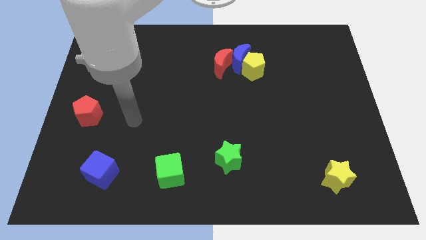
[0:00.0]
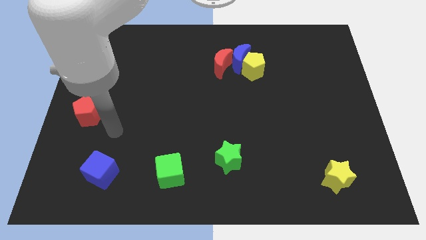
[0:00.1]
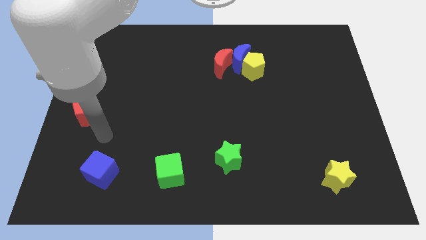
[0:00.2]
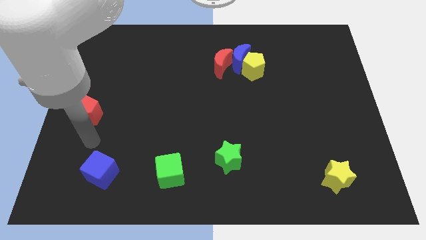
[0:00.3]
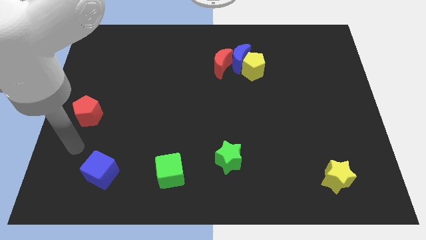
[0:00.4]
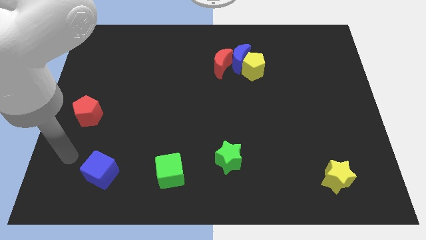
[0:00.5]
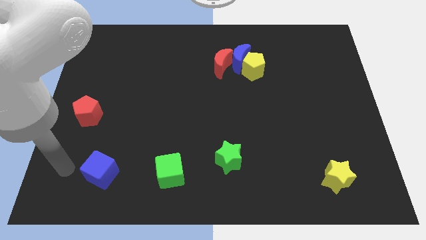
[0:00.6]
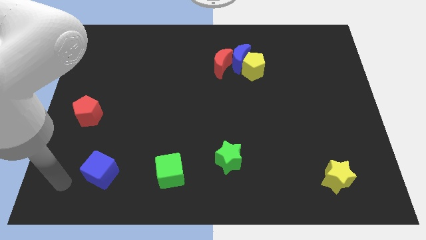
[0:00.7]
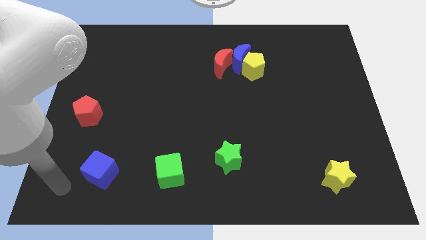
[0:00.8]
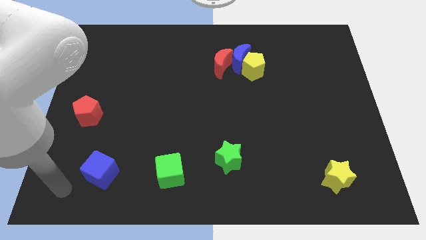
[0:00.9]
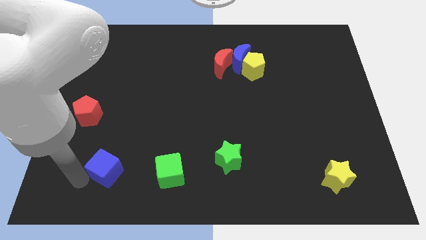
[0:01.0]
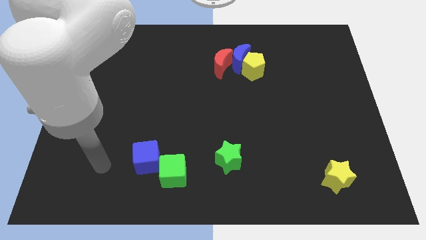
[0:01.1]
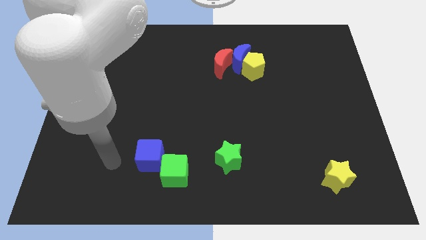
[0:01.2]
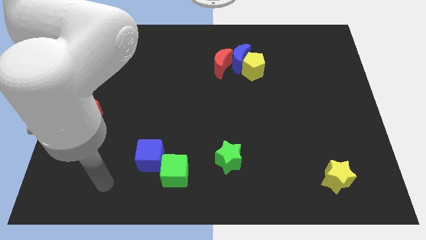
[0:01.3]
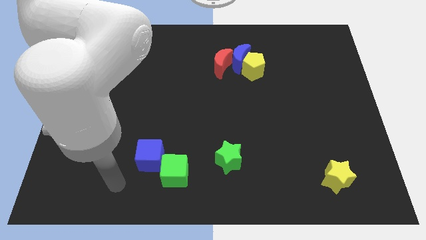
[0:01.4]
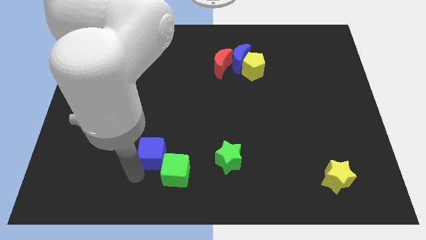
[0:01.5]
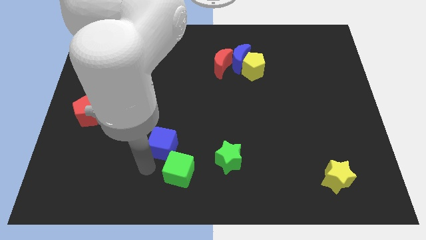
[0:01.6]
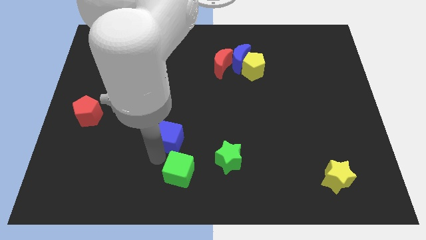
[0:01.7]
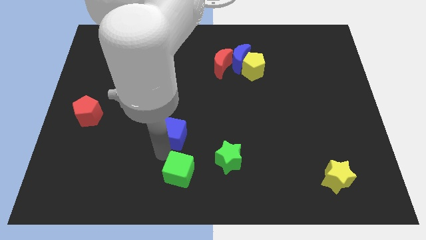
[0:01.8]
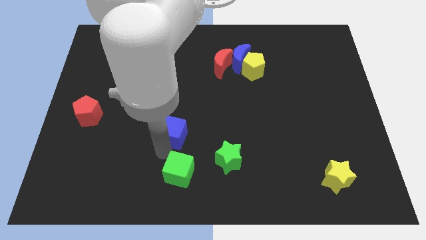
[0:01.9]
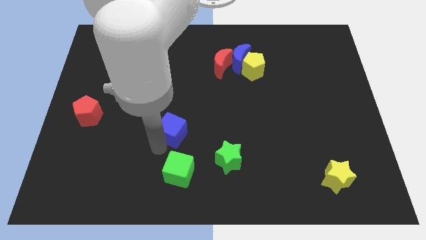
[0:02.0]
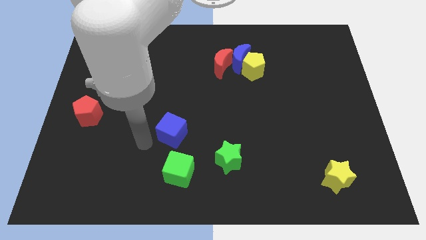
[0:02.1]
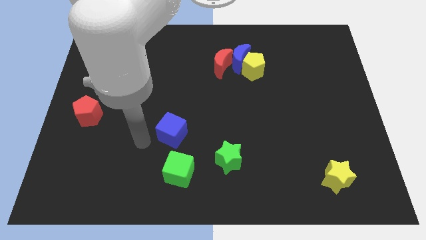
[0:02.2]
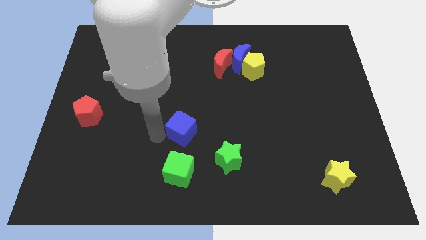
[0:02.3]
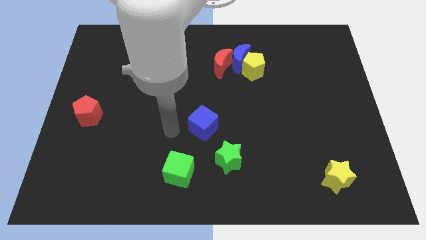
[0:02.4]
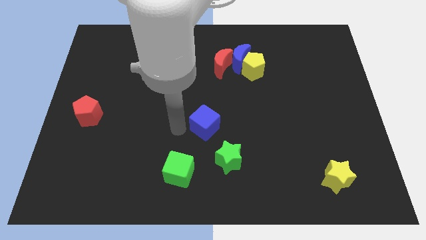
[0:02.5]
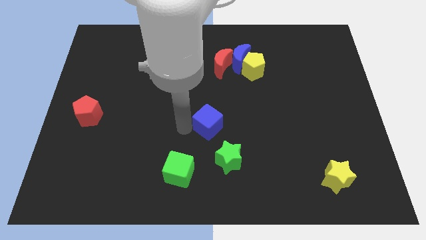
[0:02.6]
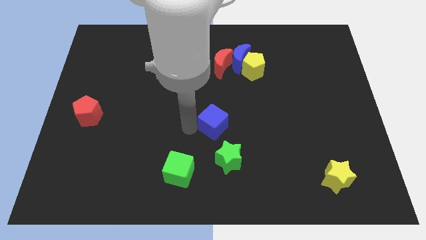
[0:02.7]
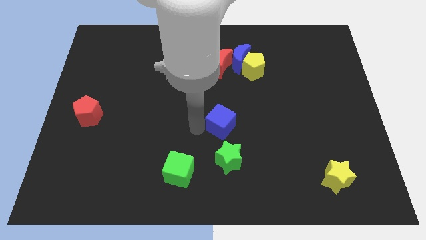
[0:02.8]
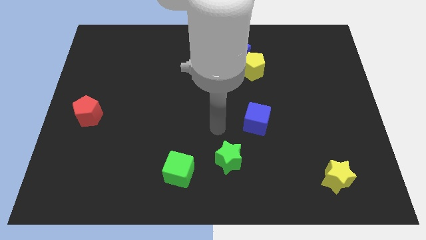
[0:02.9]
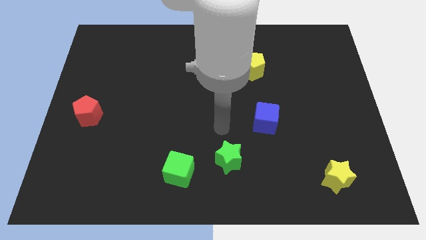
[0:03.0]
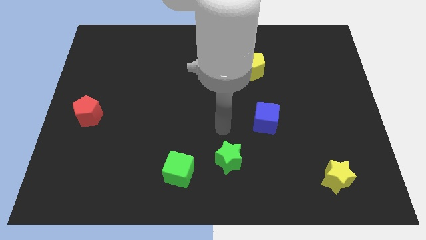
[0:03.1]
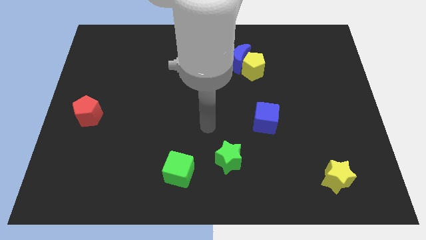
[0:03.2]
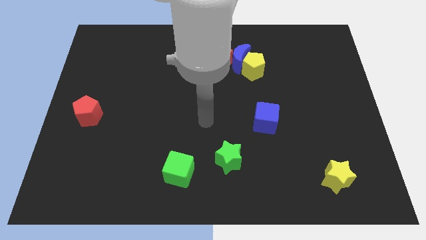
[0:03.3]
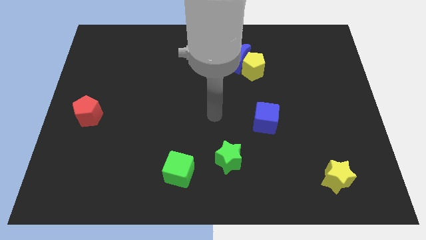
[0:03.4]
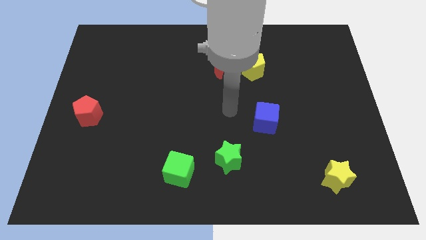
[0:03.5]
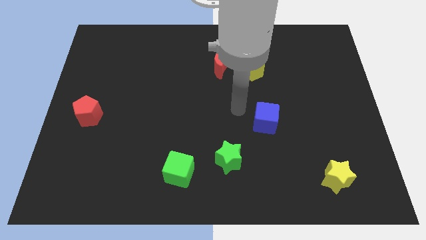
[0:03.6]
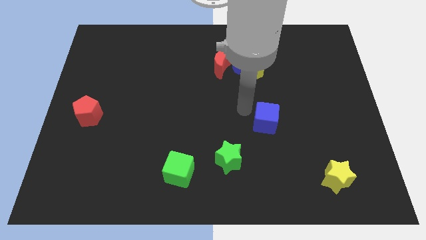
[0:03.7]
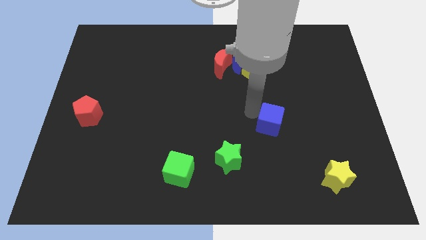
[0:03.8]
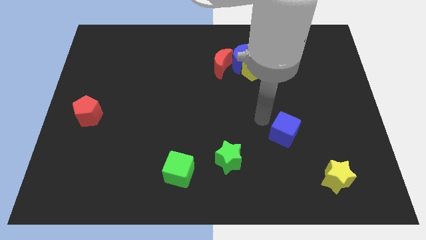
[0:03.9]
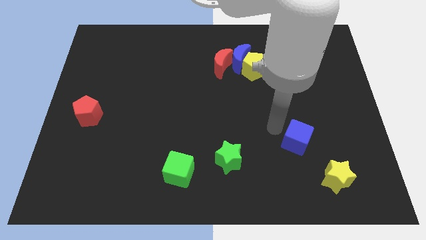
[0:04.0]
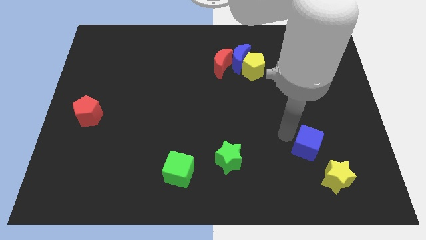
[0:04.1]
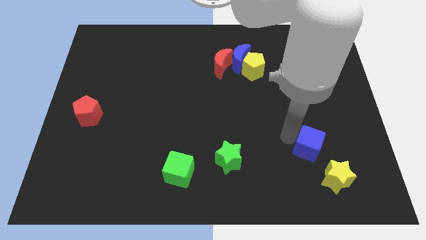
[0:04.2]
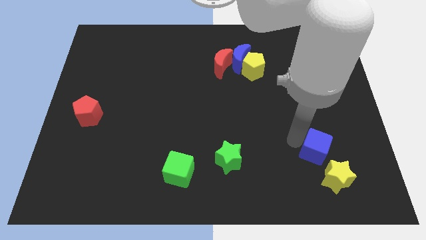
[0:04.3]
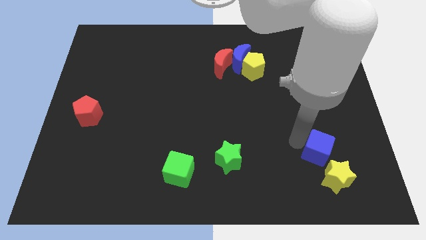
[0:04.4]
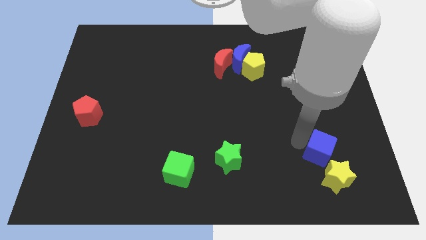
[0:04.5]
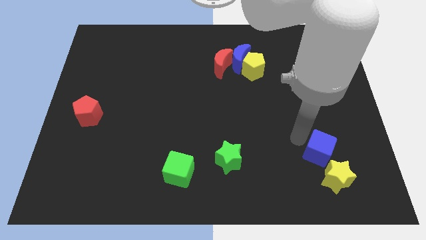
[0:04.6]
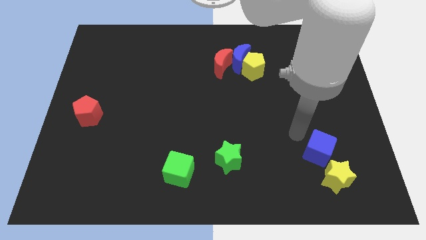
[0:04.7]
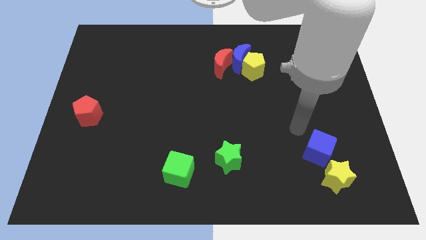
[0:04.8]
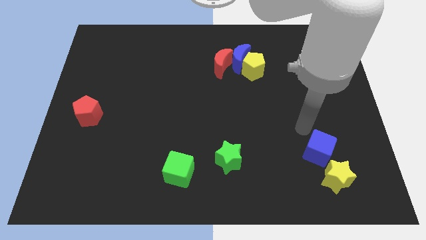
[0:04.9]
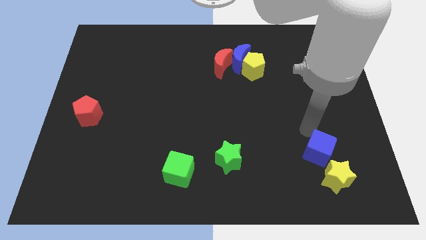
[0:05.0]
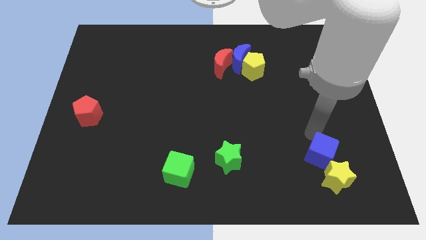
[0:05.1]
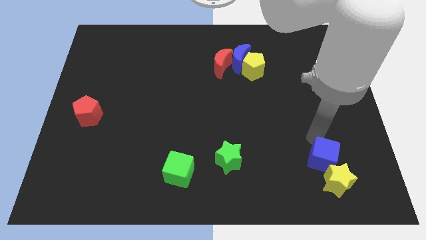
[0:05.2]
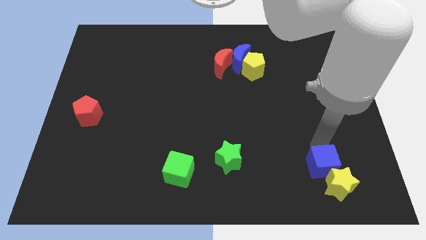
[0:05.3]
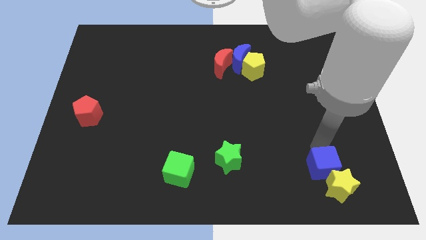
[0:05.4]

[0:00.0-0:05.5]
slide the blue cube to the yellow star

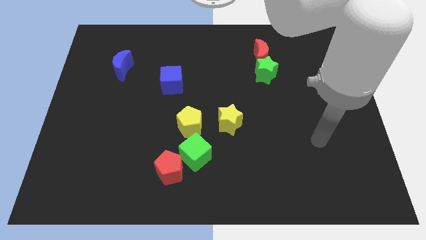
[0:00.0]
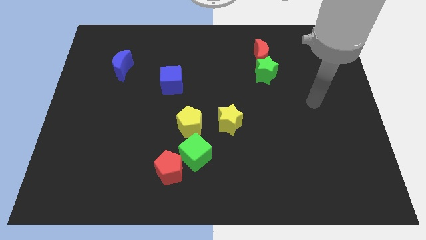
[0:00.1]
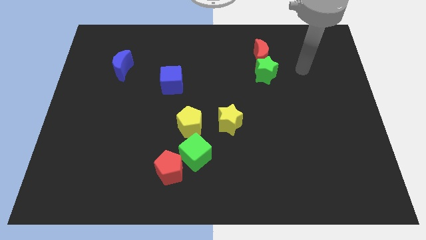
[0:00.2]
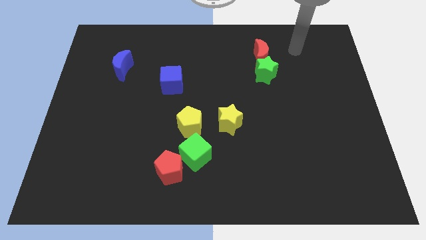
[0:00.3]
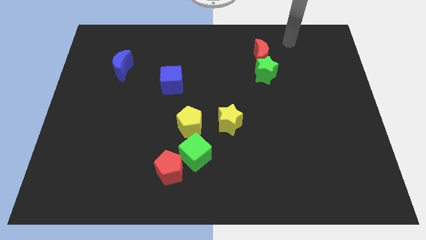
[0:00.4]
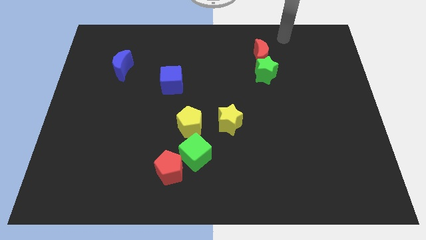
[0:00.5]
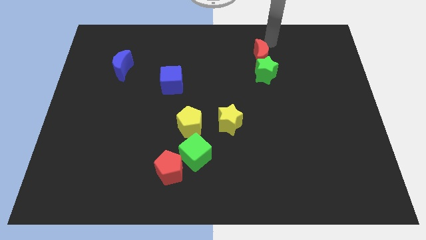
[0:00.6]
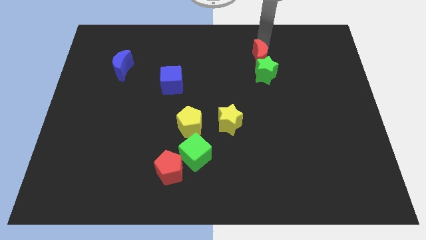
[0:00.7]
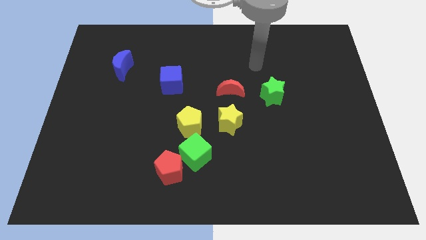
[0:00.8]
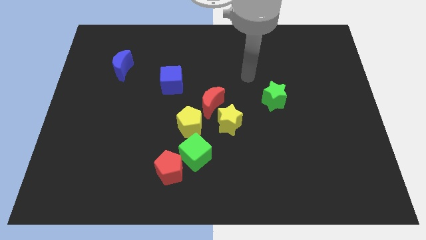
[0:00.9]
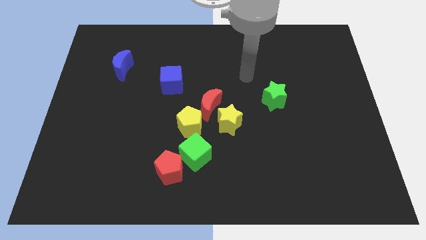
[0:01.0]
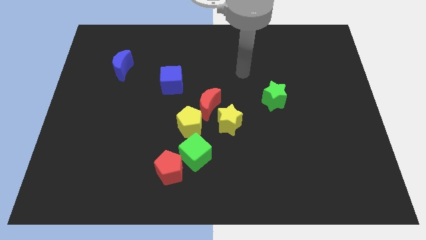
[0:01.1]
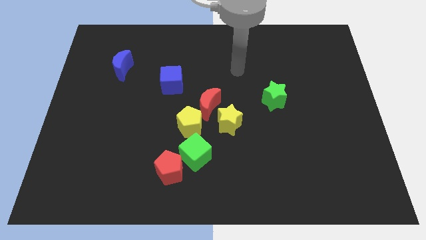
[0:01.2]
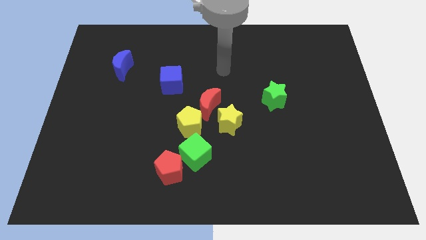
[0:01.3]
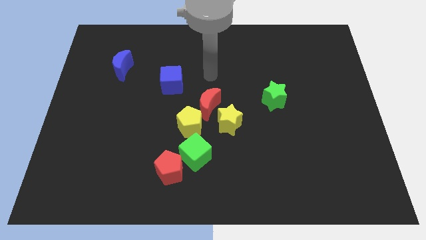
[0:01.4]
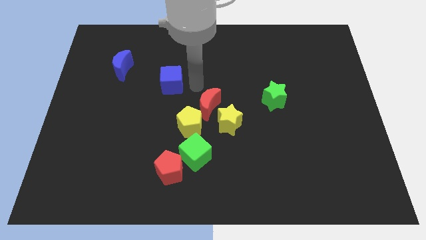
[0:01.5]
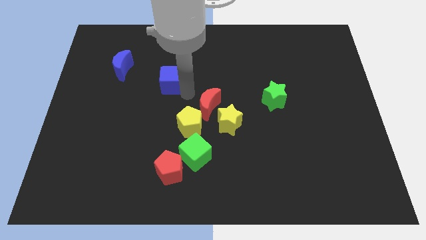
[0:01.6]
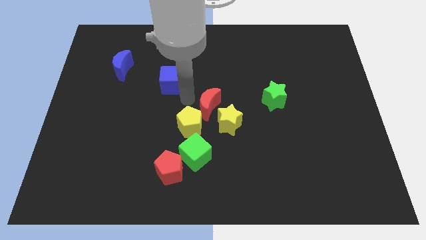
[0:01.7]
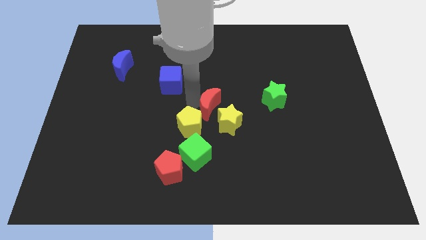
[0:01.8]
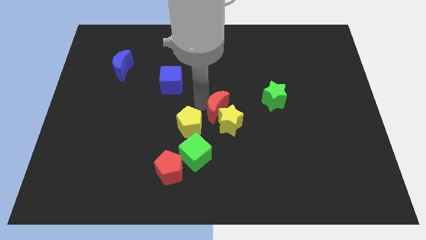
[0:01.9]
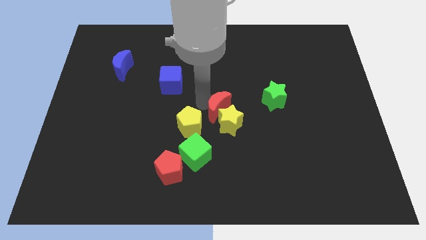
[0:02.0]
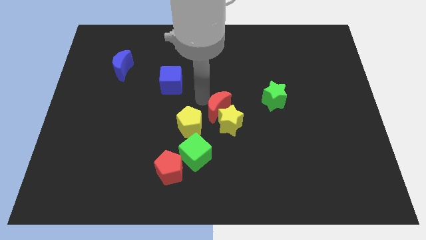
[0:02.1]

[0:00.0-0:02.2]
slide the red moon to the yellow star
